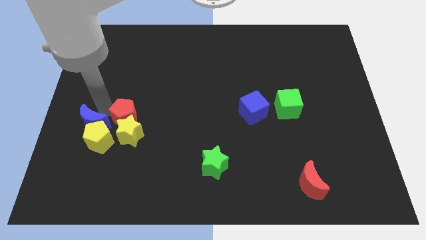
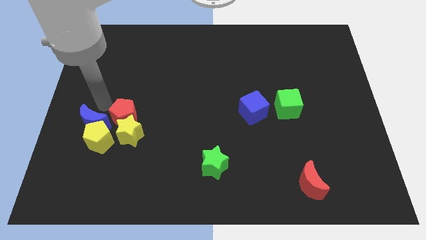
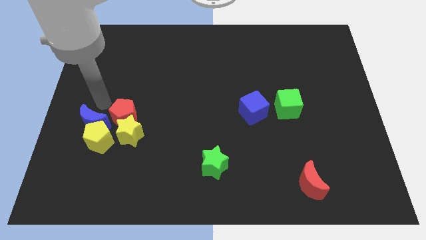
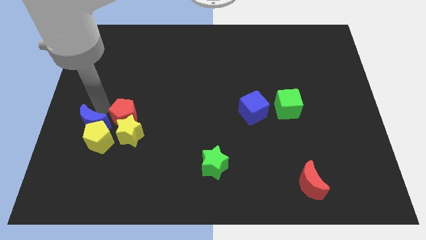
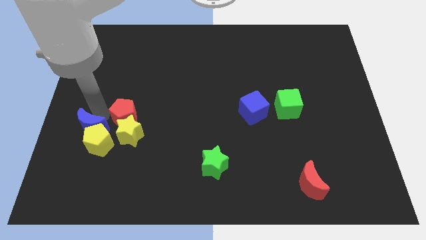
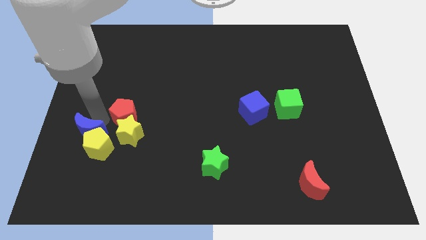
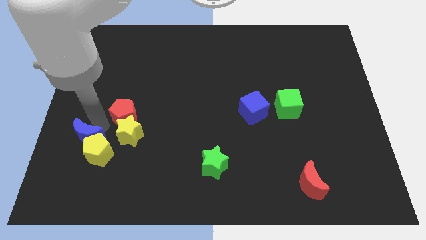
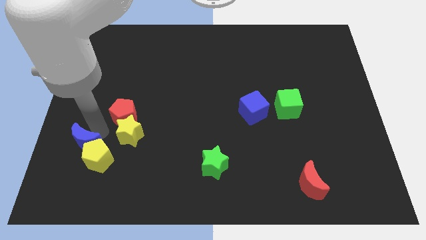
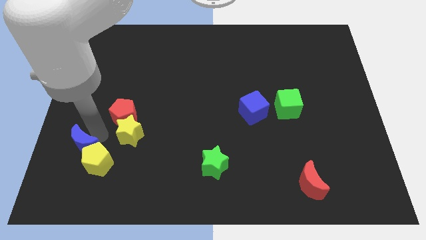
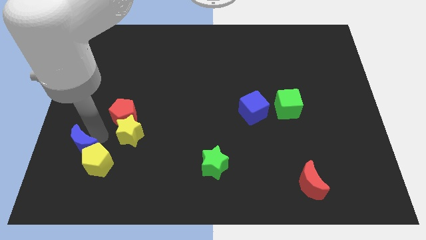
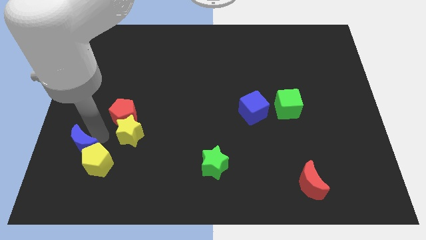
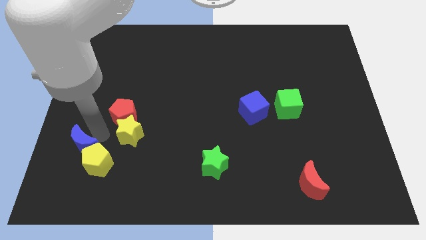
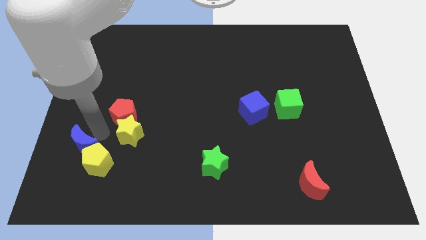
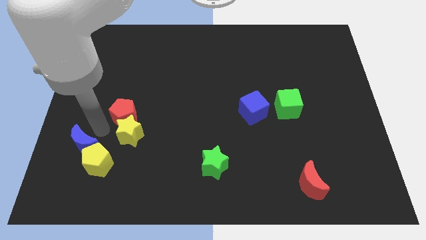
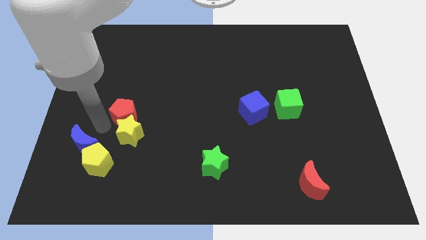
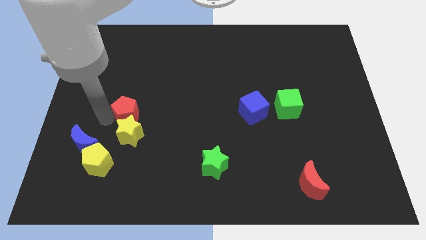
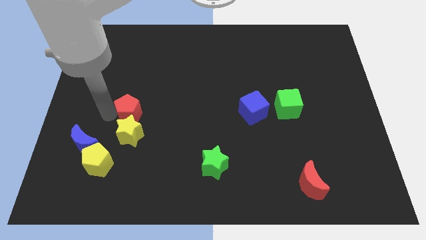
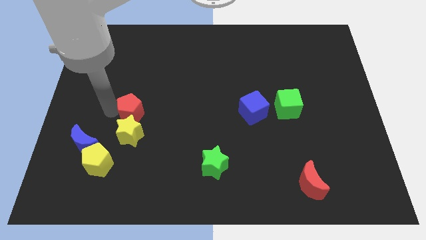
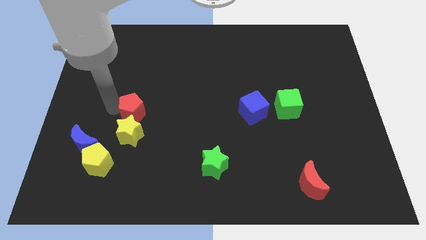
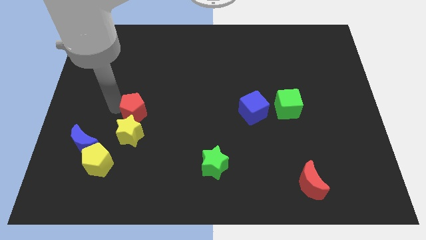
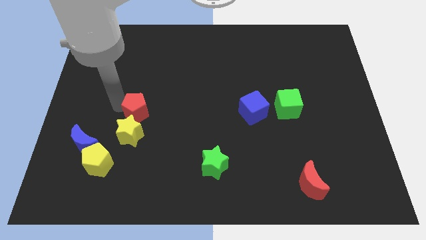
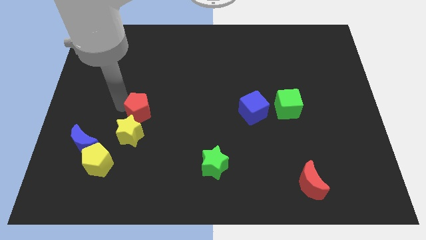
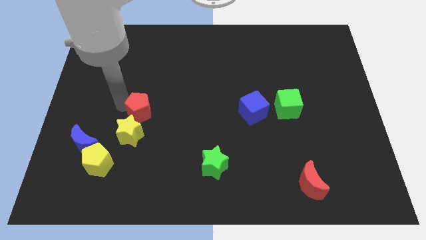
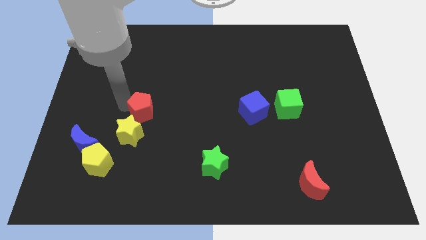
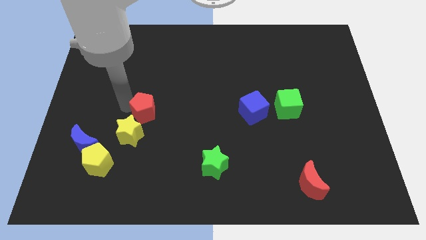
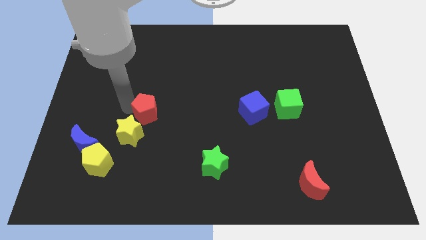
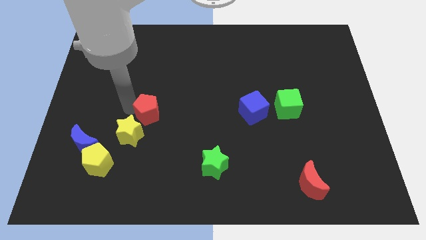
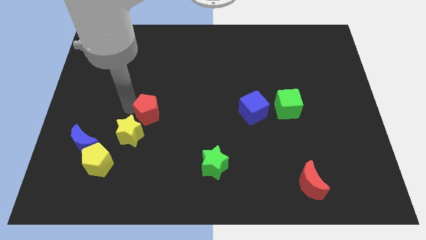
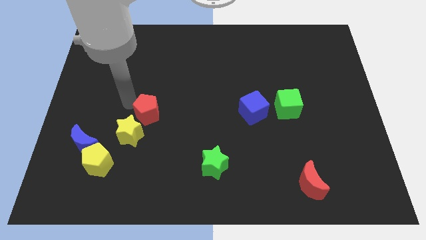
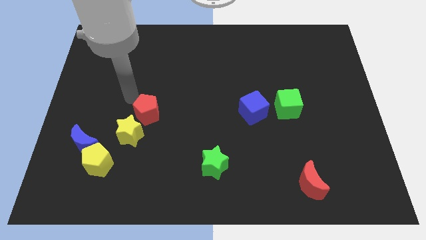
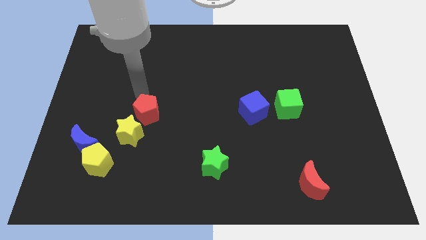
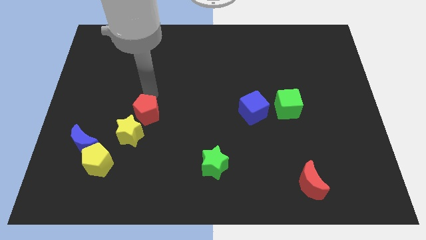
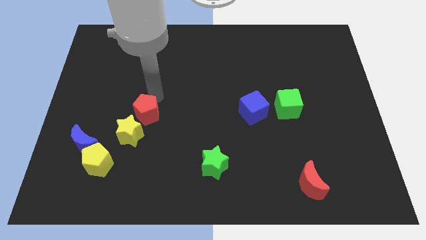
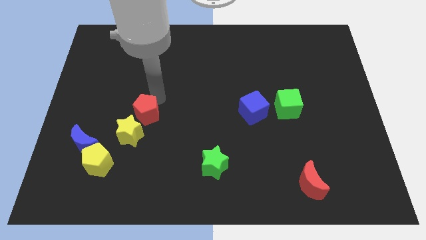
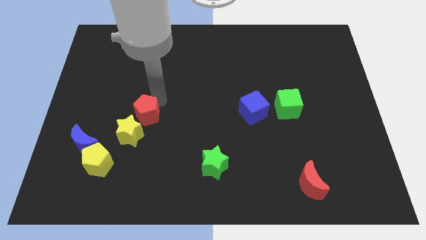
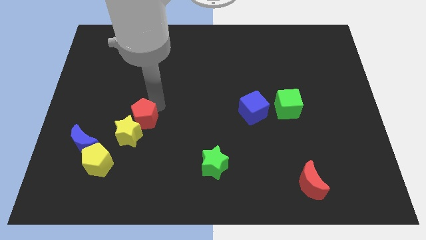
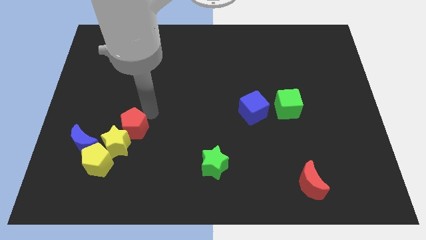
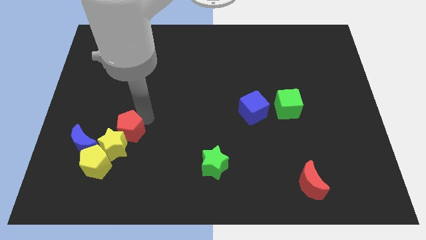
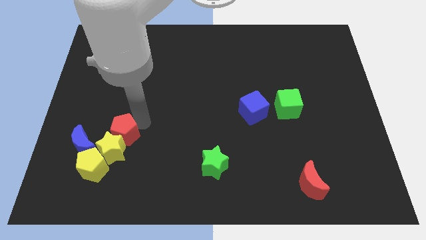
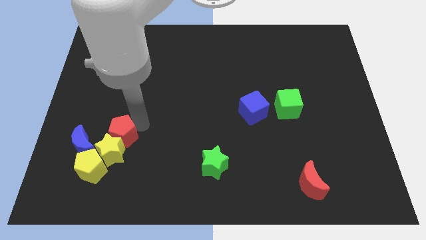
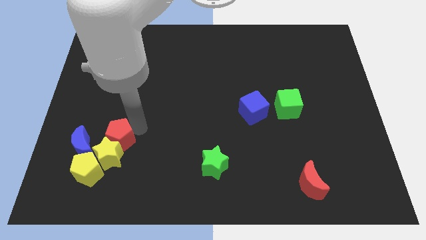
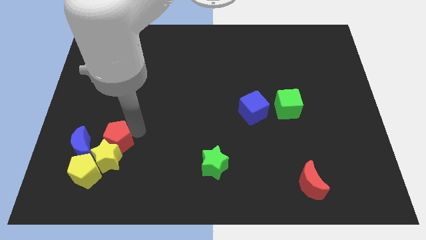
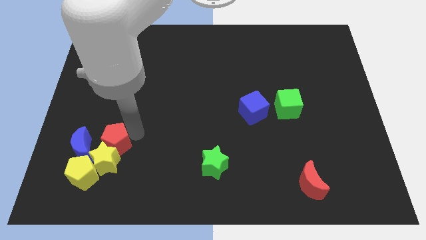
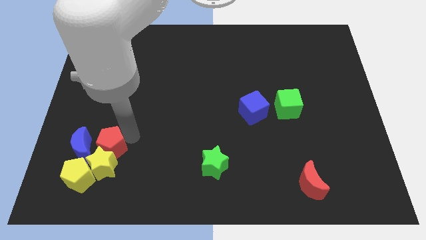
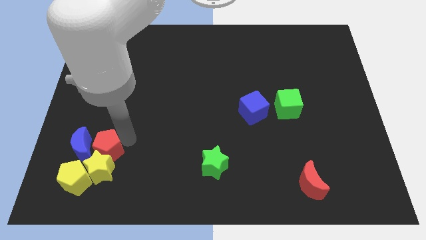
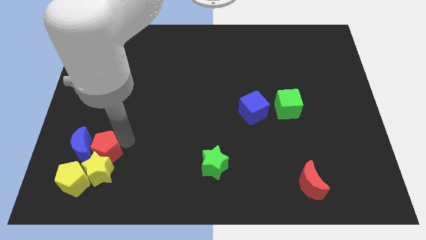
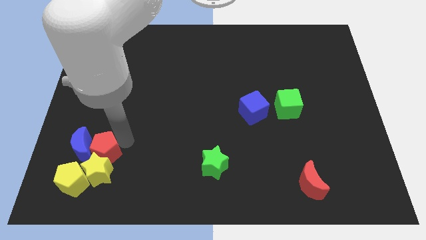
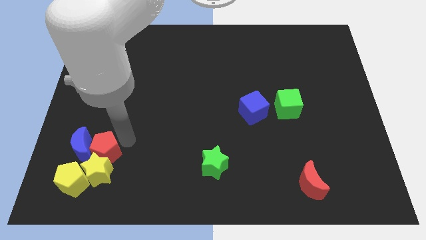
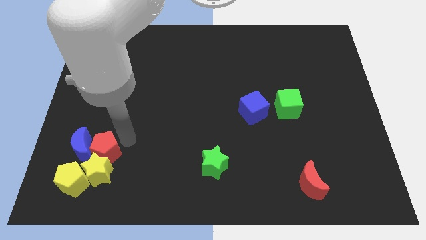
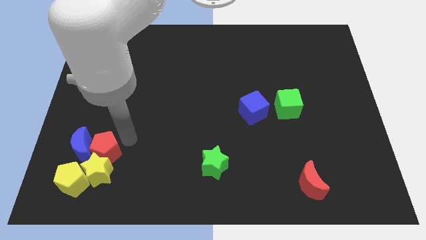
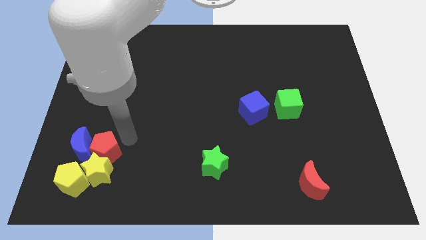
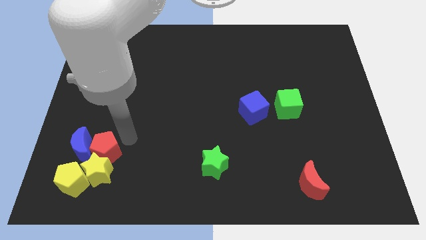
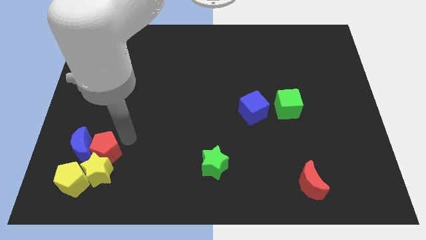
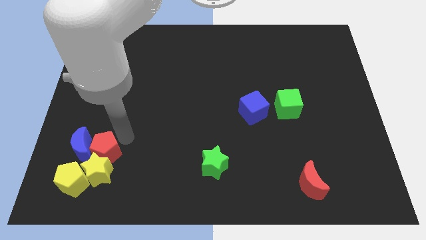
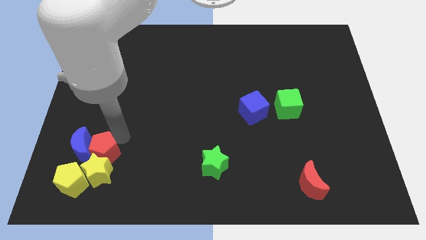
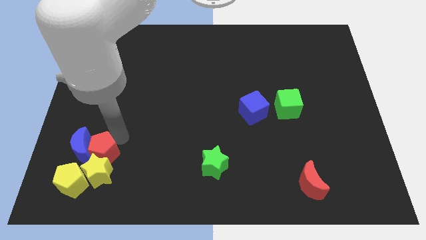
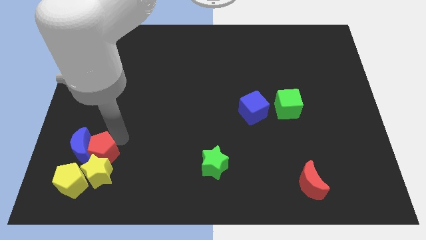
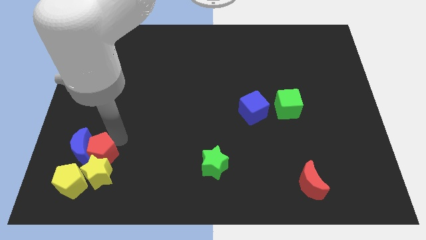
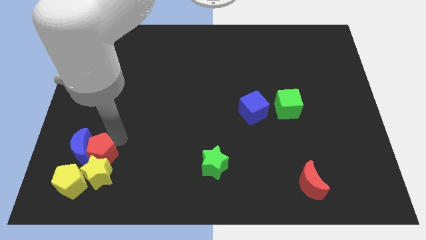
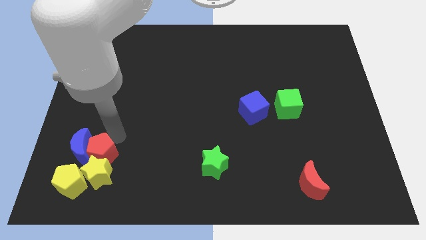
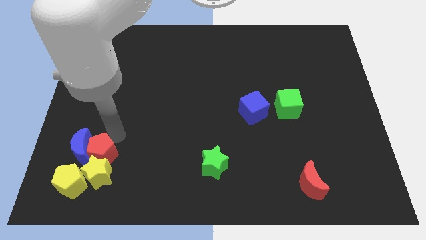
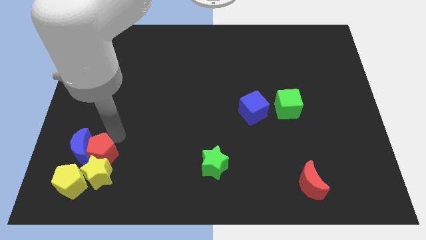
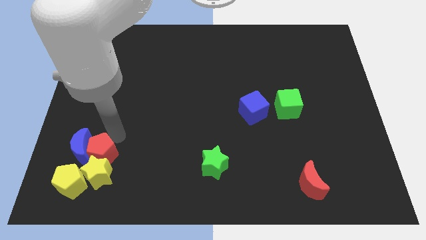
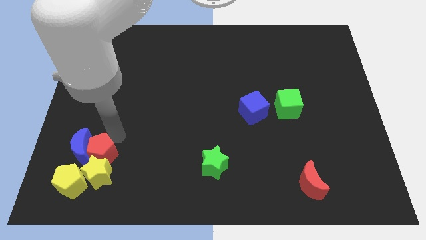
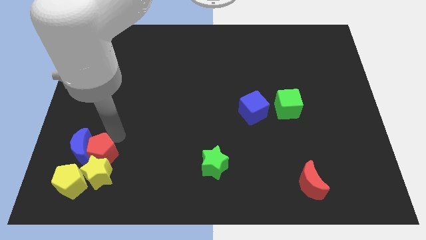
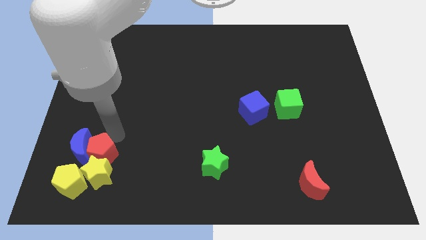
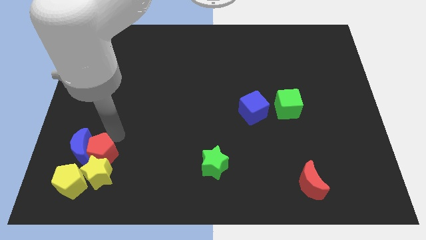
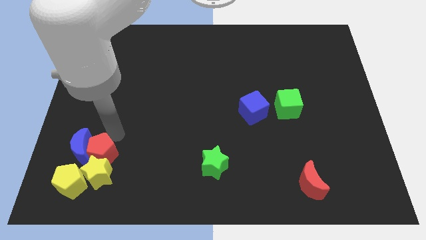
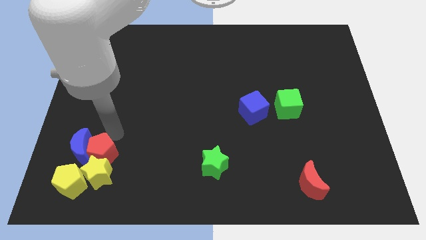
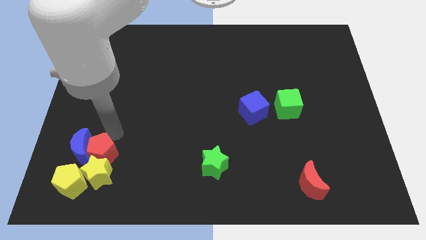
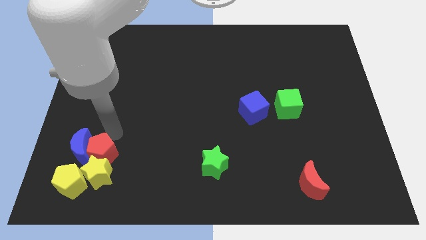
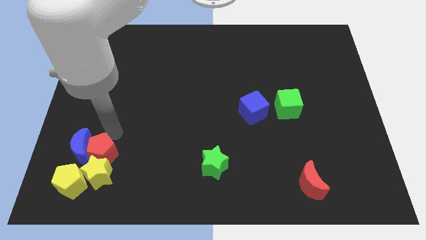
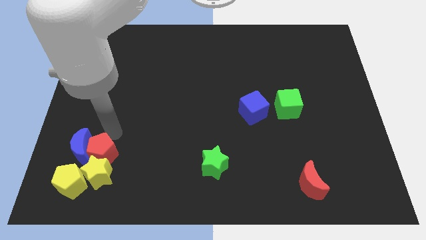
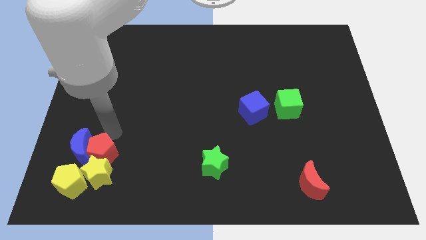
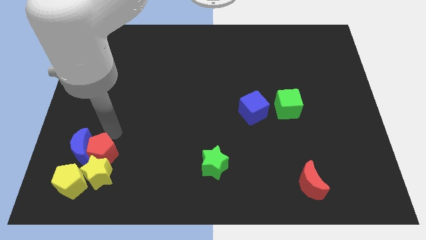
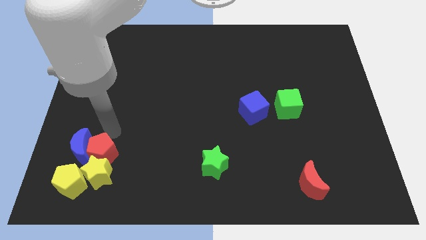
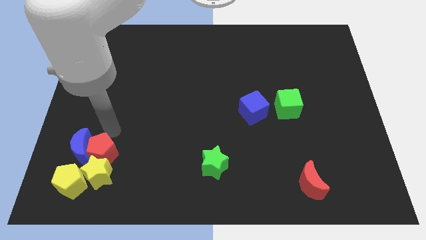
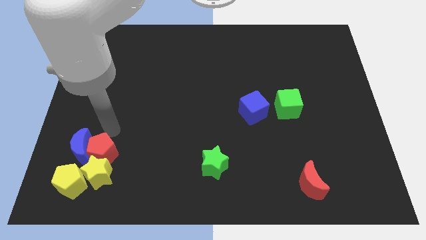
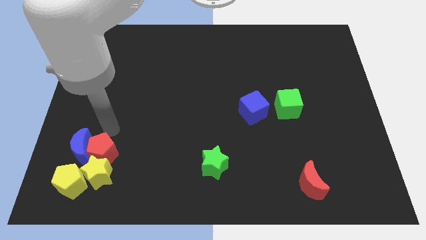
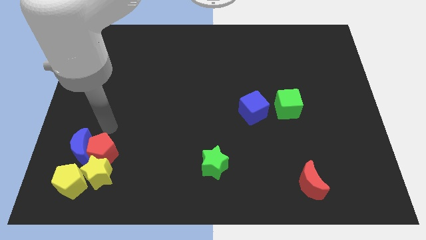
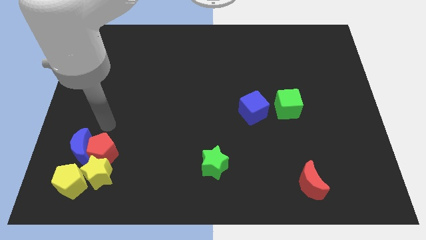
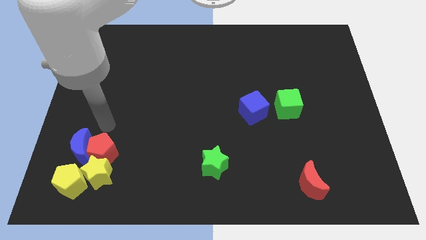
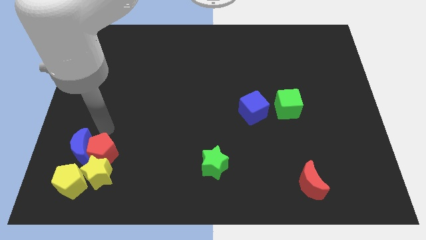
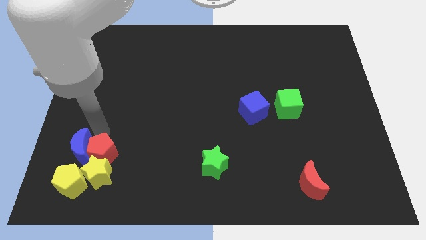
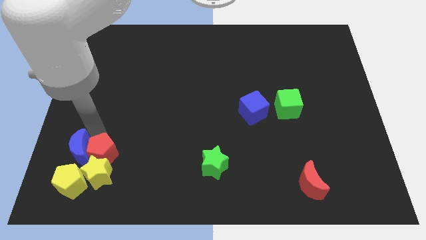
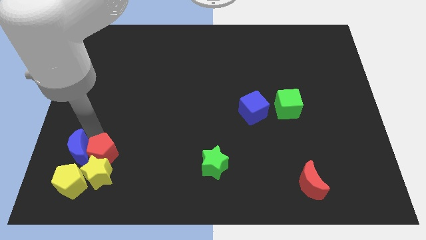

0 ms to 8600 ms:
push the blue moonred pentagonyellow star and yellow pentagon towards the bottom left

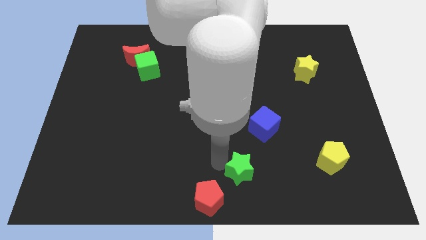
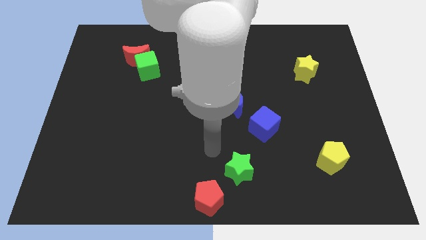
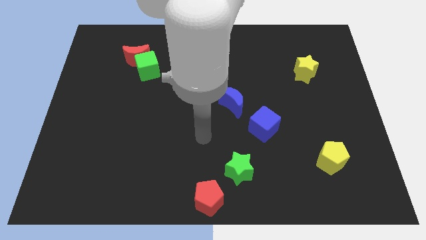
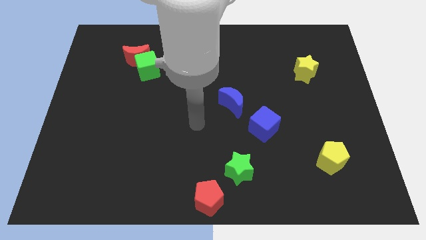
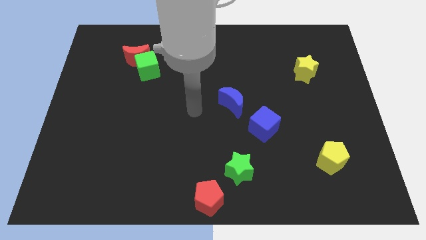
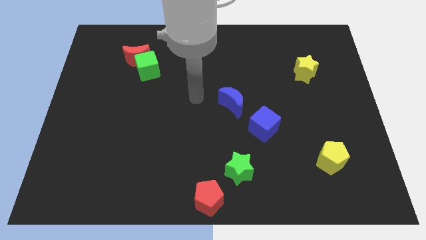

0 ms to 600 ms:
place your hand at center of the board
